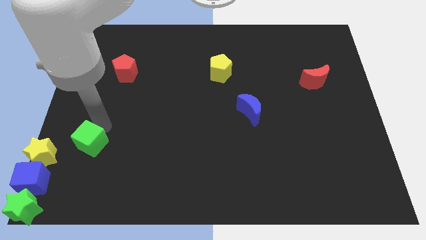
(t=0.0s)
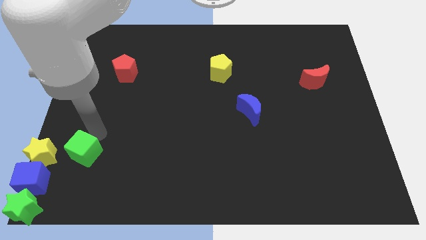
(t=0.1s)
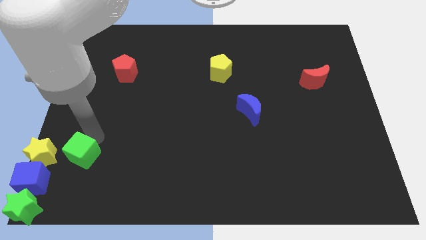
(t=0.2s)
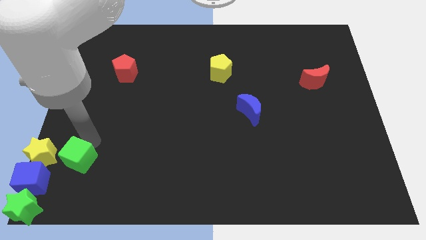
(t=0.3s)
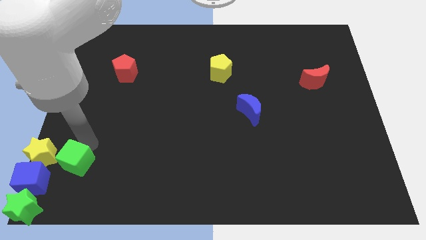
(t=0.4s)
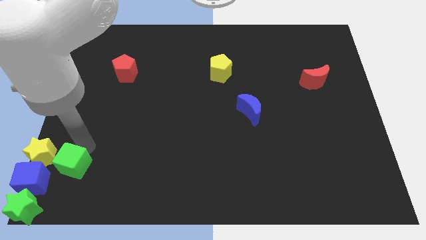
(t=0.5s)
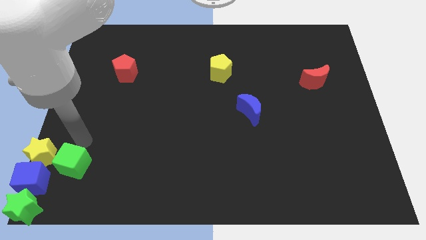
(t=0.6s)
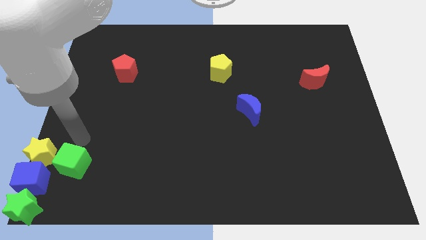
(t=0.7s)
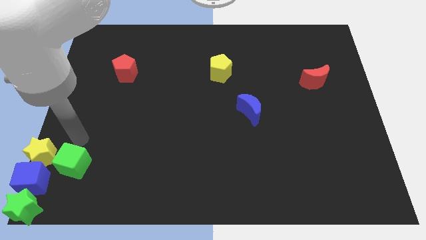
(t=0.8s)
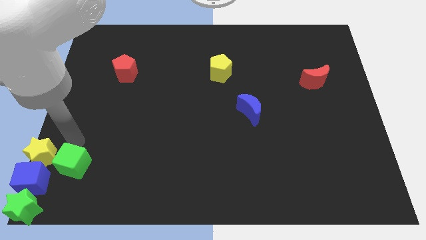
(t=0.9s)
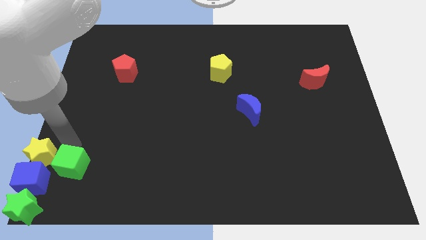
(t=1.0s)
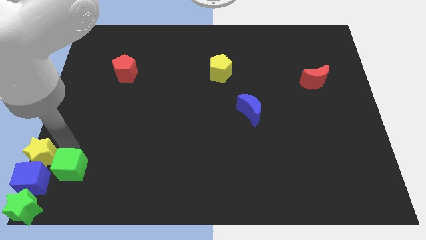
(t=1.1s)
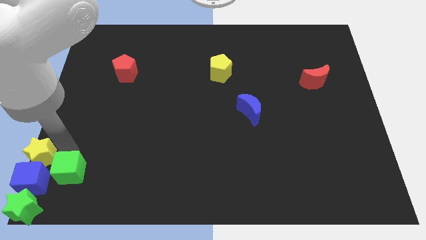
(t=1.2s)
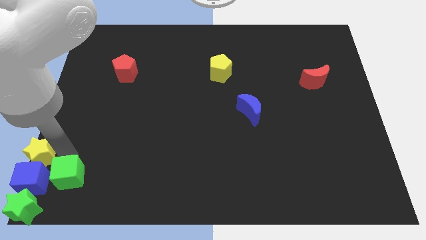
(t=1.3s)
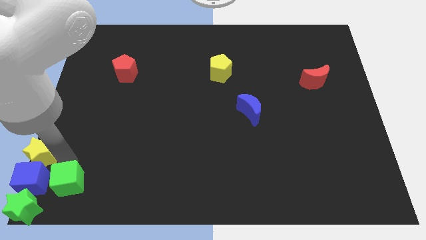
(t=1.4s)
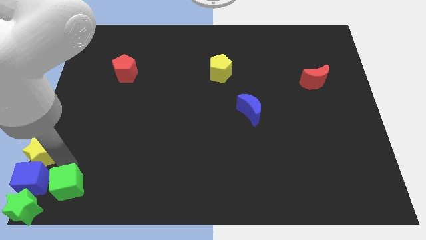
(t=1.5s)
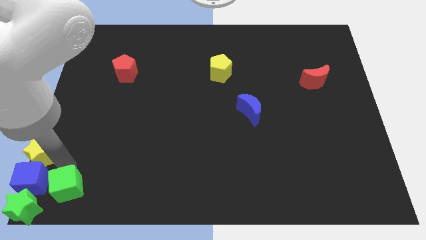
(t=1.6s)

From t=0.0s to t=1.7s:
move the green cube to the right of the blue cube

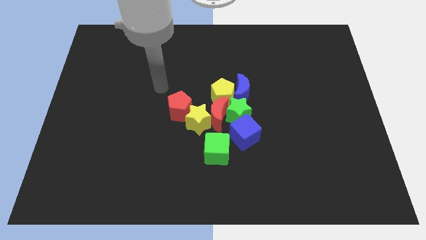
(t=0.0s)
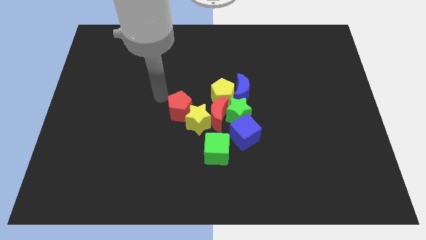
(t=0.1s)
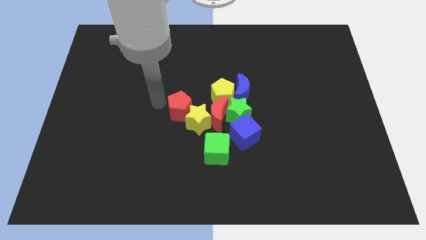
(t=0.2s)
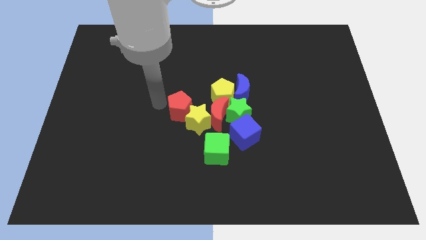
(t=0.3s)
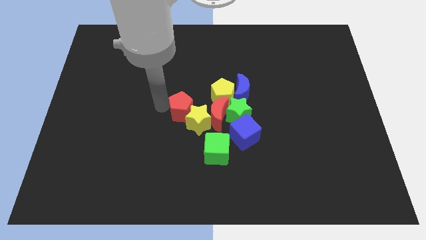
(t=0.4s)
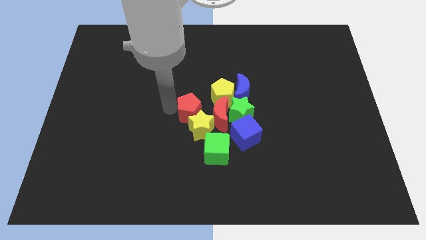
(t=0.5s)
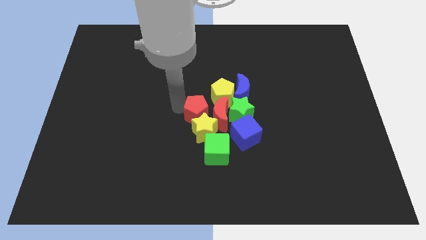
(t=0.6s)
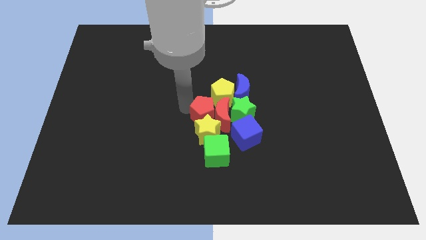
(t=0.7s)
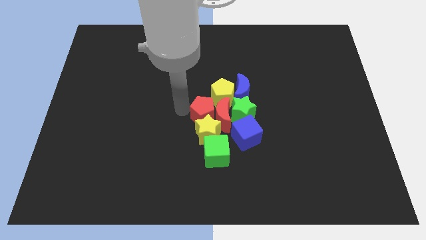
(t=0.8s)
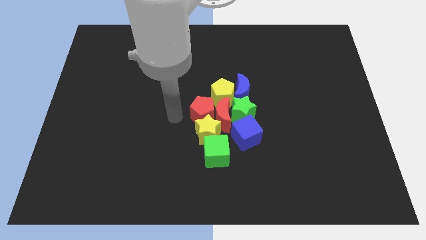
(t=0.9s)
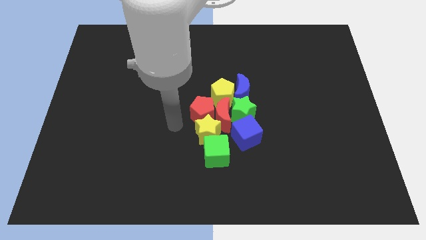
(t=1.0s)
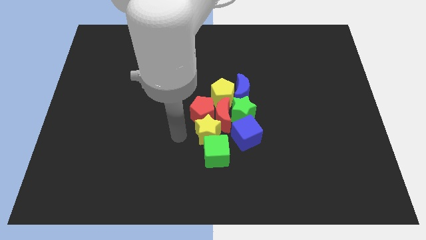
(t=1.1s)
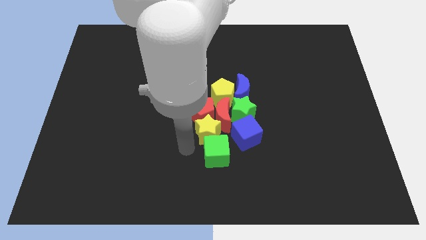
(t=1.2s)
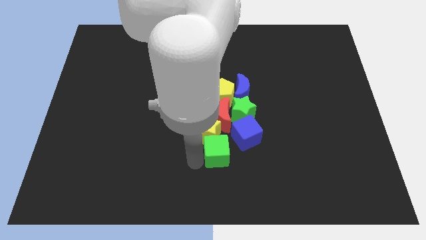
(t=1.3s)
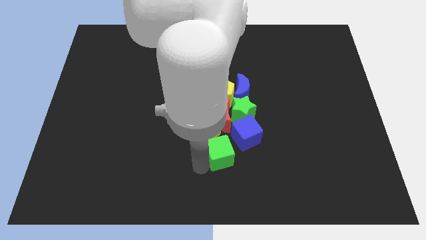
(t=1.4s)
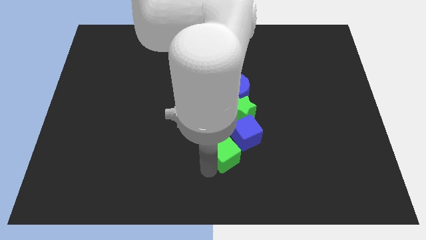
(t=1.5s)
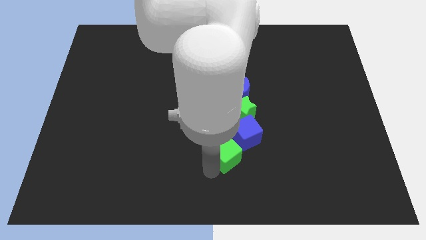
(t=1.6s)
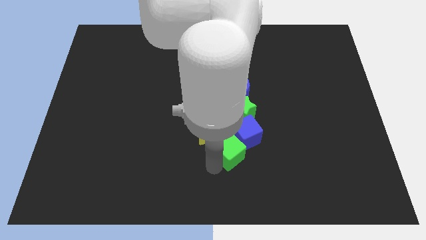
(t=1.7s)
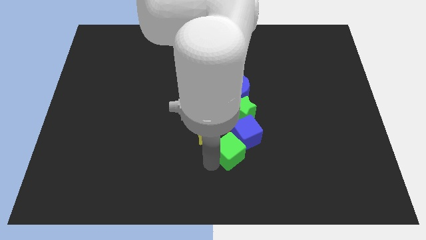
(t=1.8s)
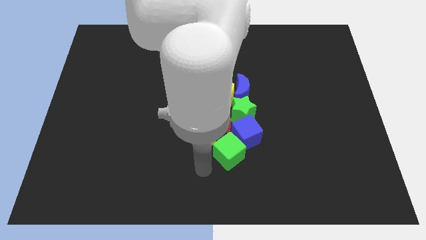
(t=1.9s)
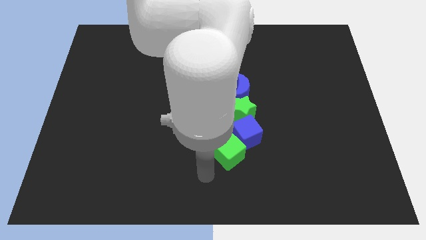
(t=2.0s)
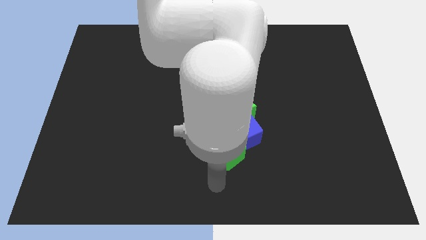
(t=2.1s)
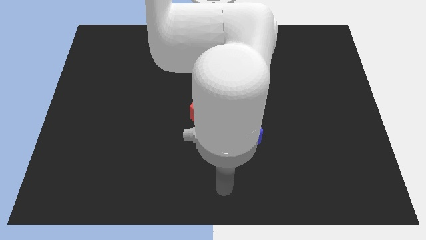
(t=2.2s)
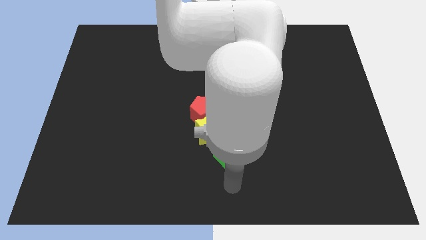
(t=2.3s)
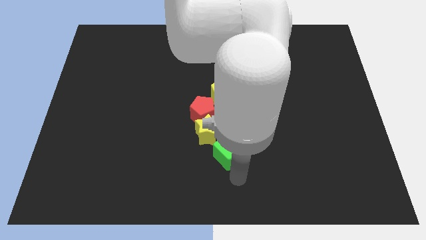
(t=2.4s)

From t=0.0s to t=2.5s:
push the red pentagon to the left side of the red crescent

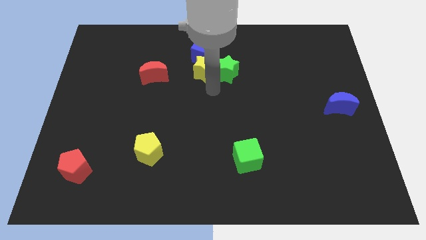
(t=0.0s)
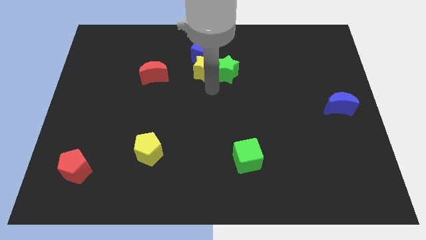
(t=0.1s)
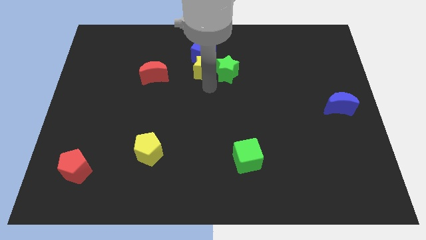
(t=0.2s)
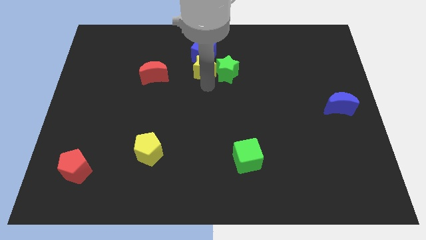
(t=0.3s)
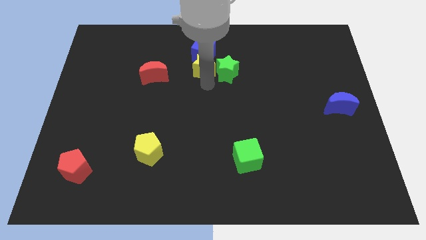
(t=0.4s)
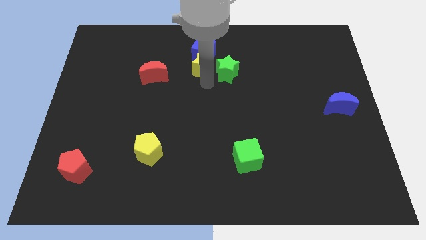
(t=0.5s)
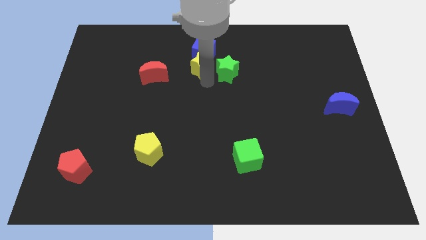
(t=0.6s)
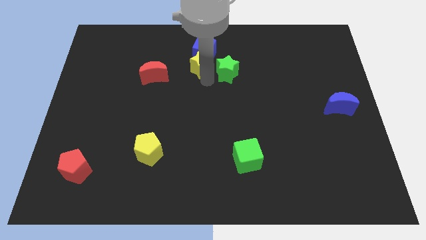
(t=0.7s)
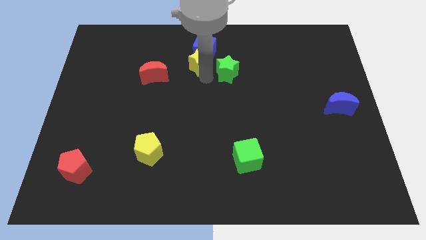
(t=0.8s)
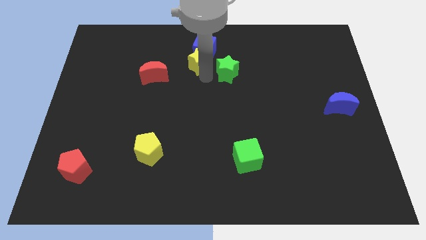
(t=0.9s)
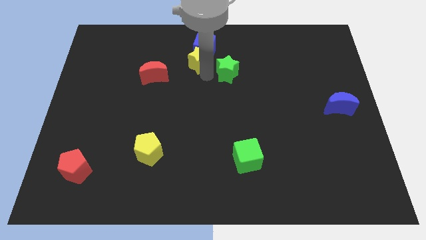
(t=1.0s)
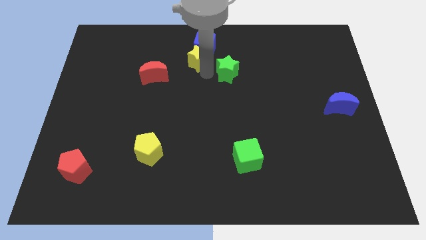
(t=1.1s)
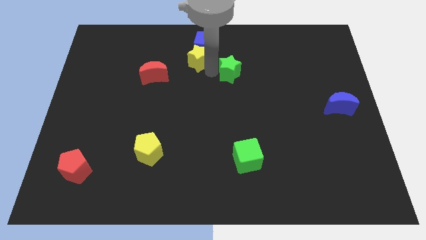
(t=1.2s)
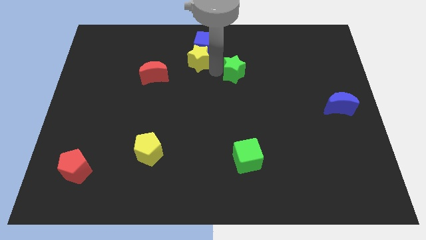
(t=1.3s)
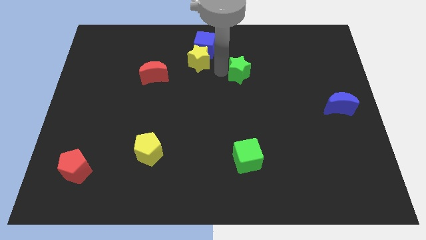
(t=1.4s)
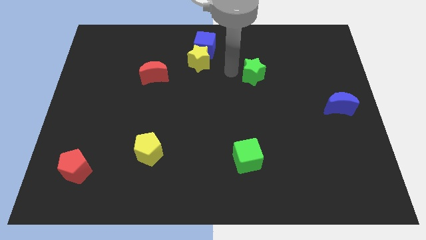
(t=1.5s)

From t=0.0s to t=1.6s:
push the yellow star into the blue cube

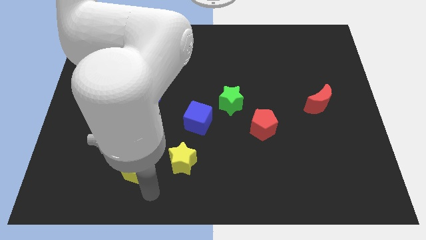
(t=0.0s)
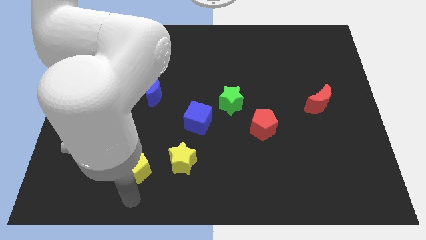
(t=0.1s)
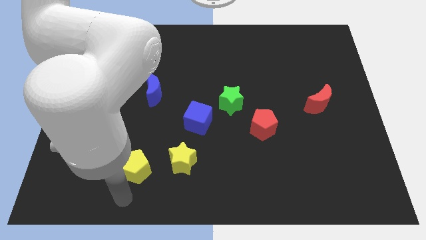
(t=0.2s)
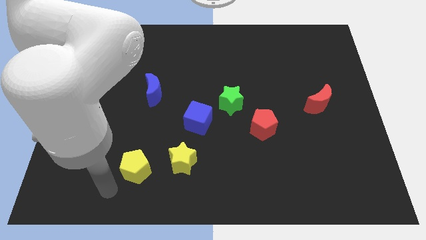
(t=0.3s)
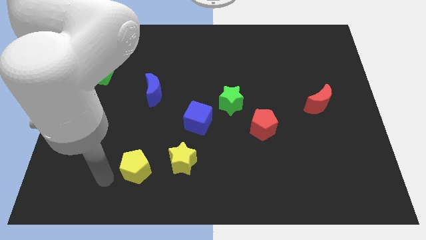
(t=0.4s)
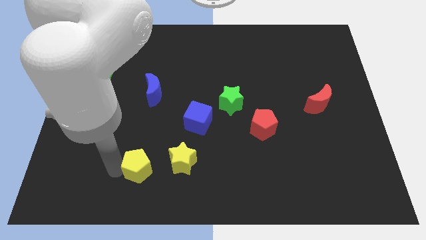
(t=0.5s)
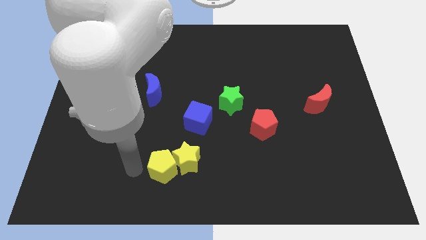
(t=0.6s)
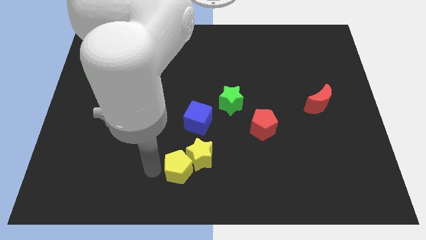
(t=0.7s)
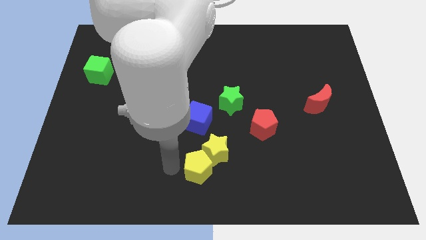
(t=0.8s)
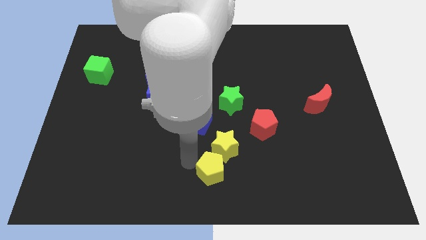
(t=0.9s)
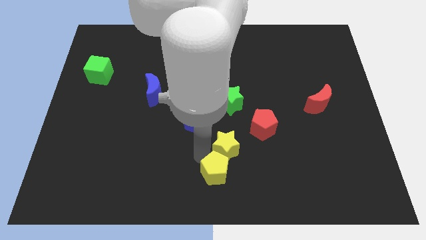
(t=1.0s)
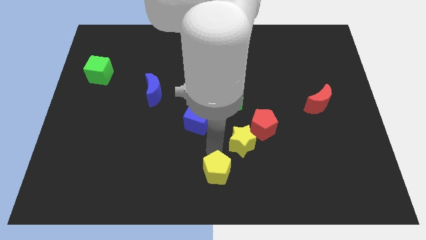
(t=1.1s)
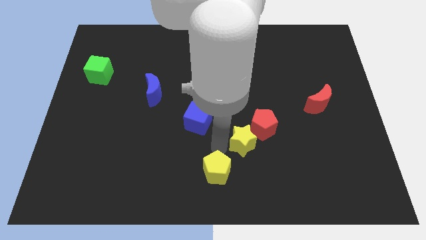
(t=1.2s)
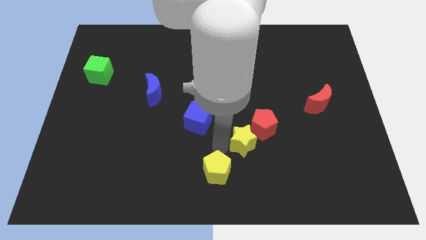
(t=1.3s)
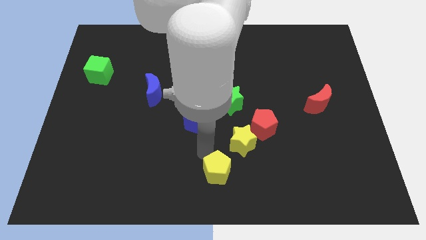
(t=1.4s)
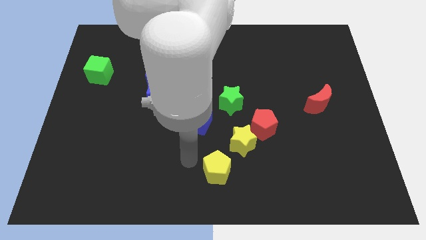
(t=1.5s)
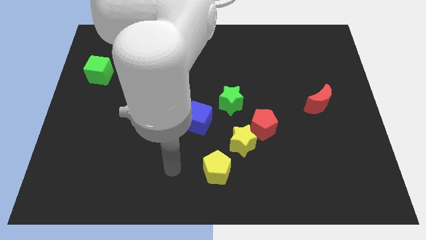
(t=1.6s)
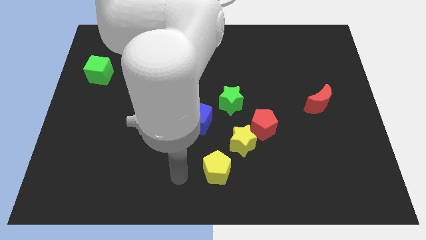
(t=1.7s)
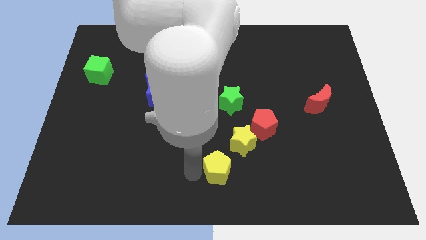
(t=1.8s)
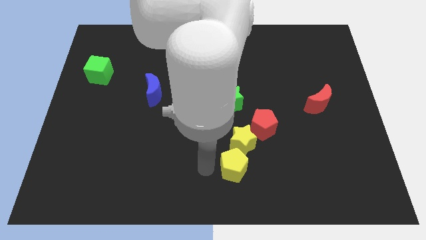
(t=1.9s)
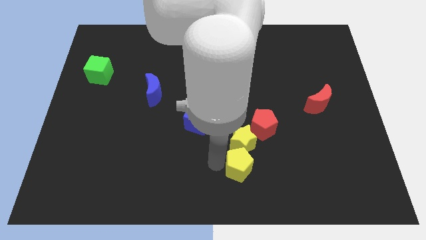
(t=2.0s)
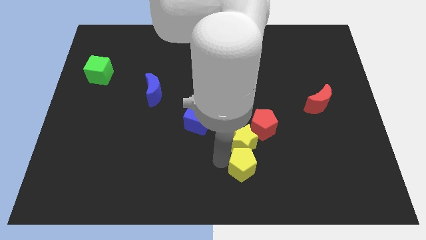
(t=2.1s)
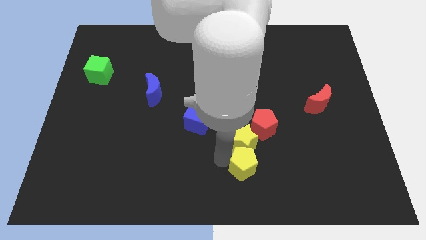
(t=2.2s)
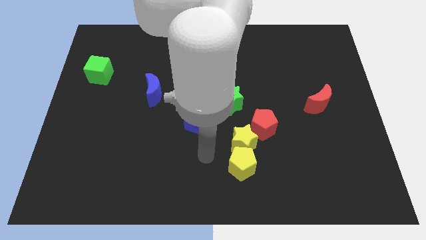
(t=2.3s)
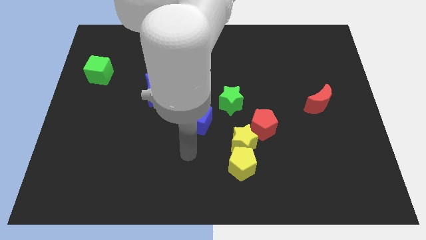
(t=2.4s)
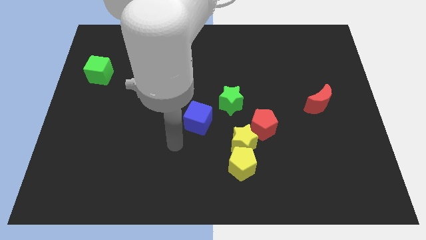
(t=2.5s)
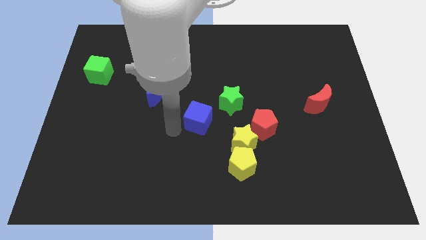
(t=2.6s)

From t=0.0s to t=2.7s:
push the yellow blocks towards the red pentagon

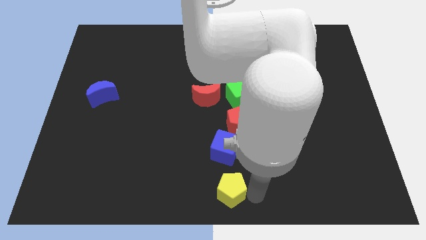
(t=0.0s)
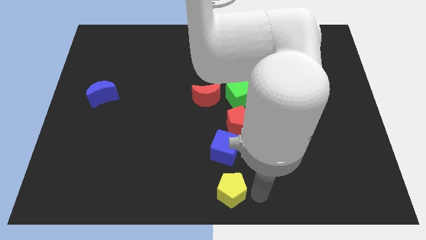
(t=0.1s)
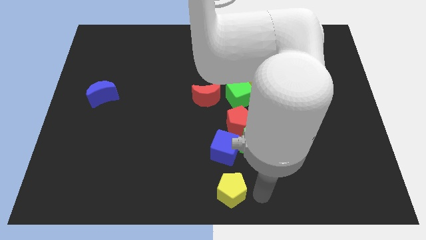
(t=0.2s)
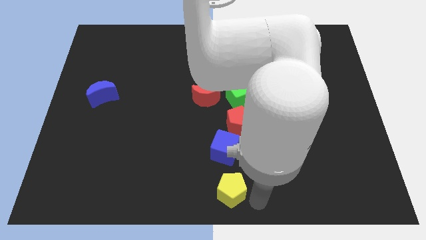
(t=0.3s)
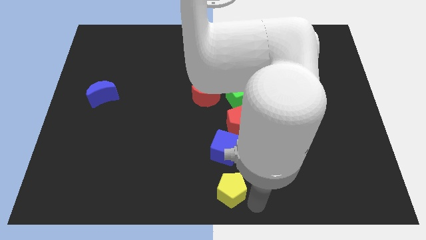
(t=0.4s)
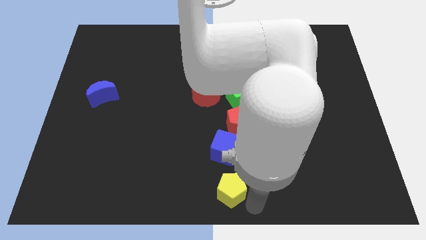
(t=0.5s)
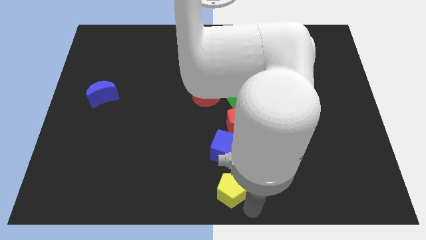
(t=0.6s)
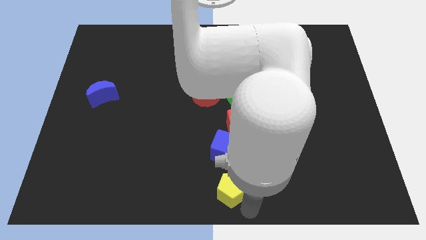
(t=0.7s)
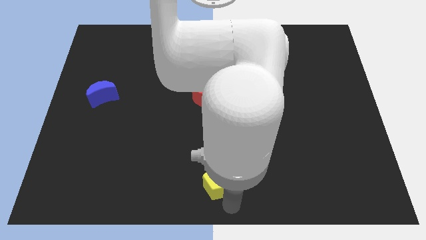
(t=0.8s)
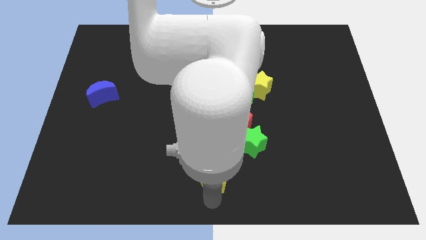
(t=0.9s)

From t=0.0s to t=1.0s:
push yellow pentagon above blue cube
